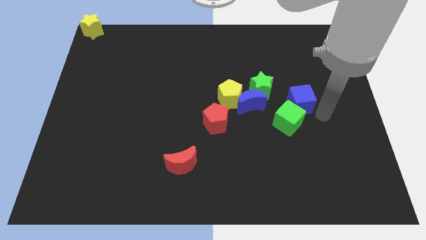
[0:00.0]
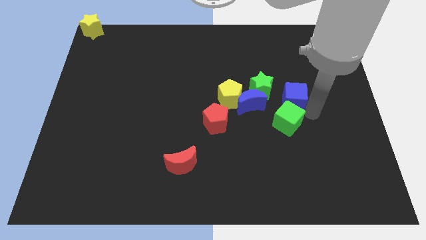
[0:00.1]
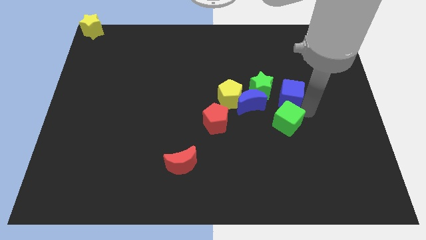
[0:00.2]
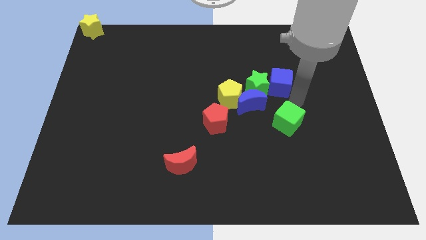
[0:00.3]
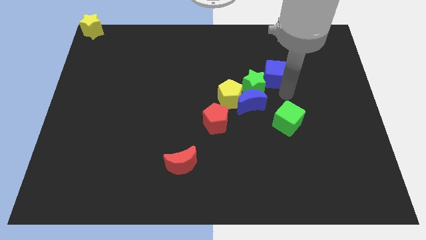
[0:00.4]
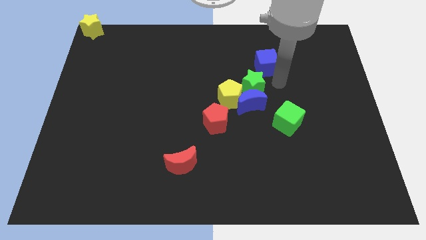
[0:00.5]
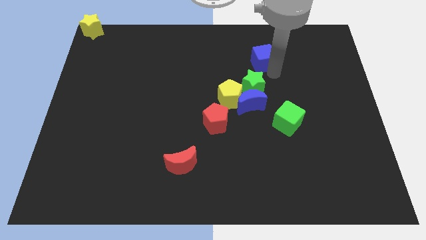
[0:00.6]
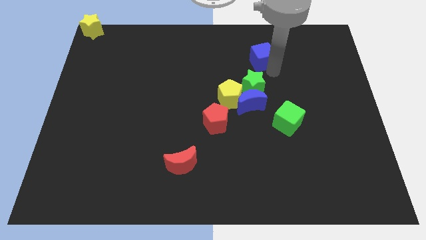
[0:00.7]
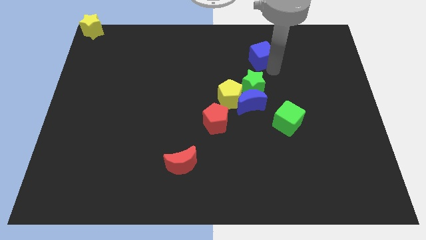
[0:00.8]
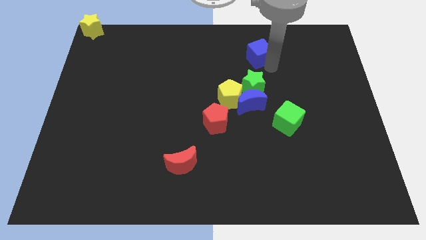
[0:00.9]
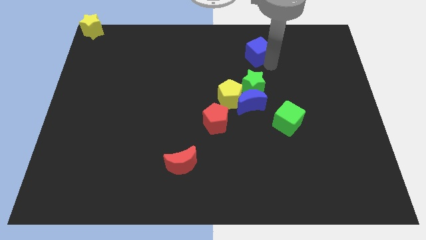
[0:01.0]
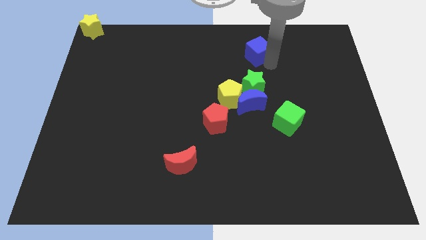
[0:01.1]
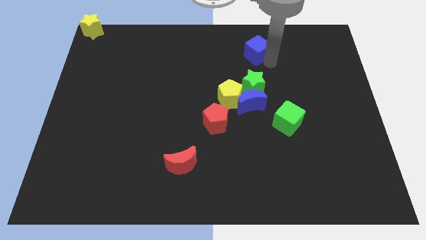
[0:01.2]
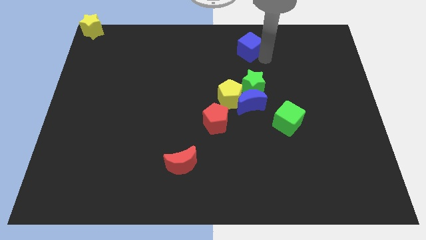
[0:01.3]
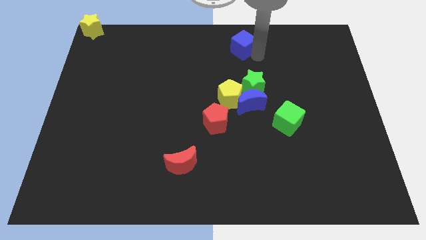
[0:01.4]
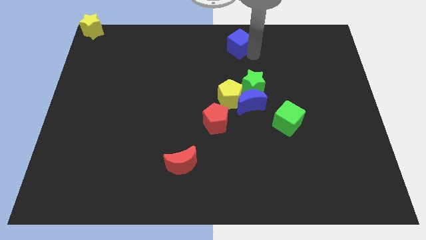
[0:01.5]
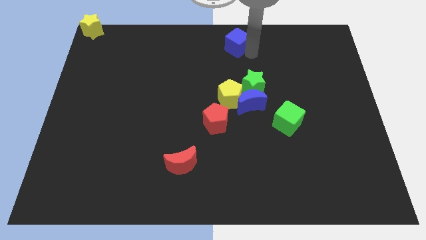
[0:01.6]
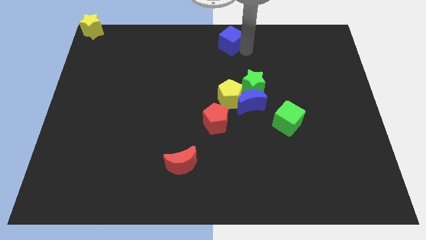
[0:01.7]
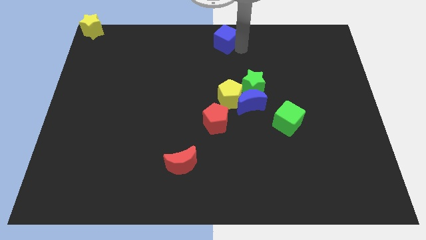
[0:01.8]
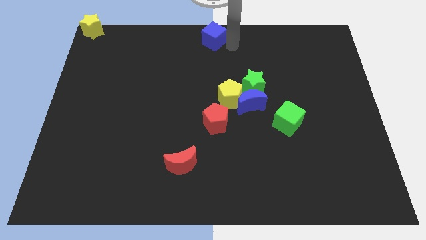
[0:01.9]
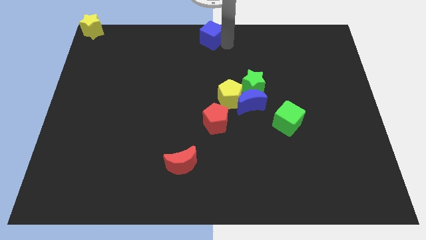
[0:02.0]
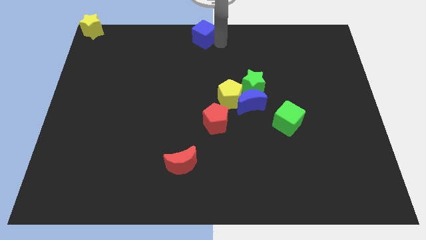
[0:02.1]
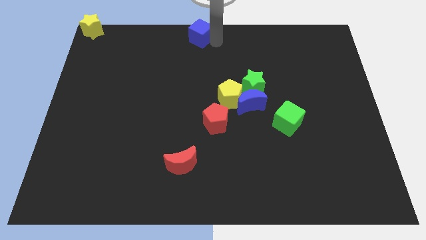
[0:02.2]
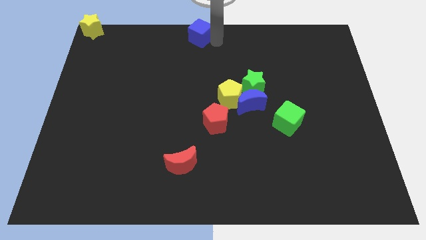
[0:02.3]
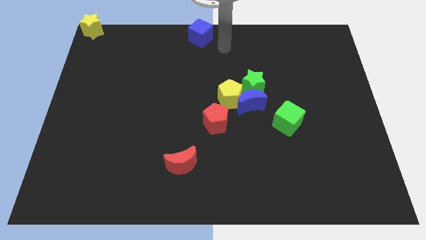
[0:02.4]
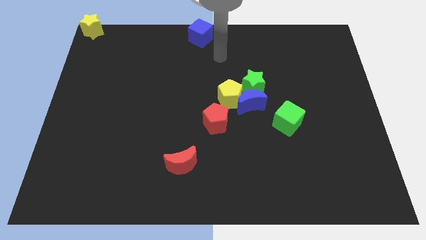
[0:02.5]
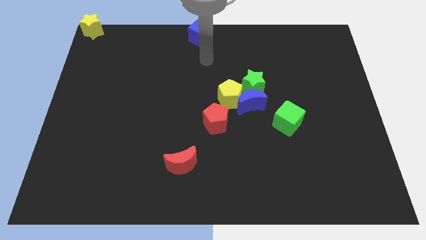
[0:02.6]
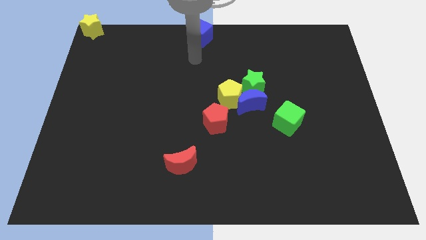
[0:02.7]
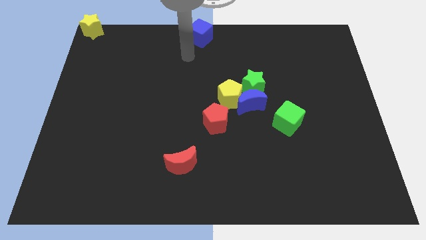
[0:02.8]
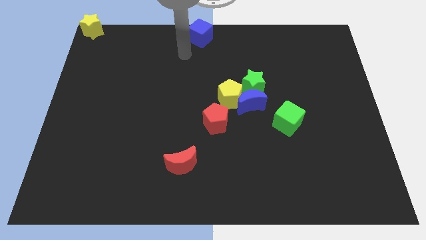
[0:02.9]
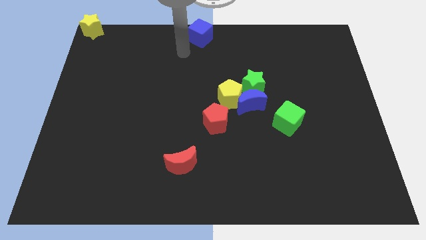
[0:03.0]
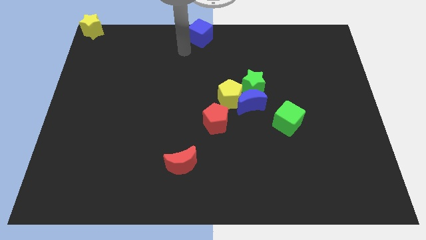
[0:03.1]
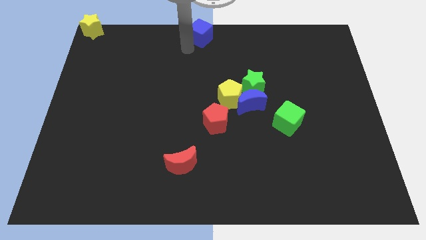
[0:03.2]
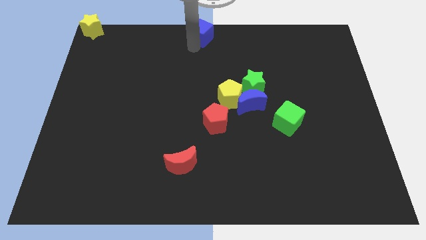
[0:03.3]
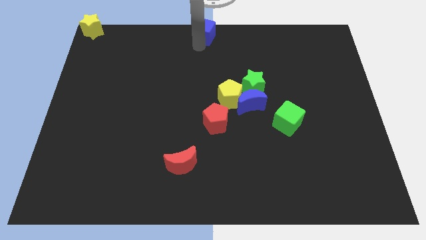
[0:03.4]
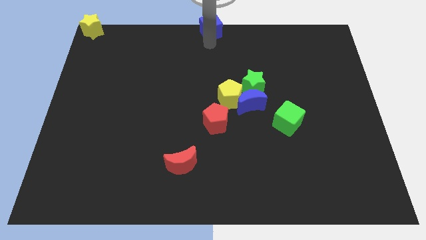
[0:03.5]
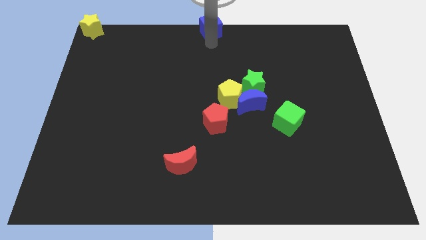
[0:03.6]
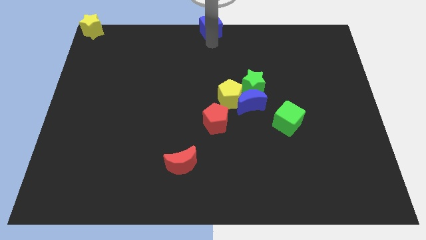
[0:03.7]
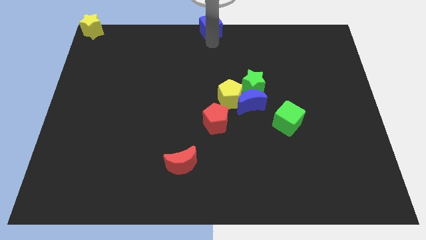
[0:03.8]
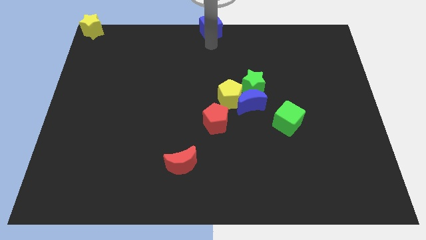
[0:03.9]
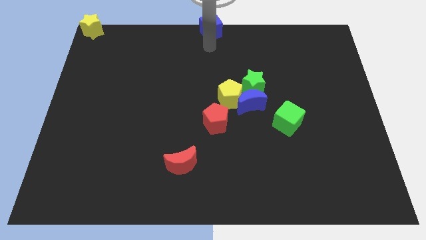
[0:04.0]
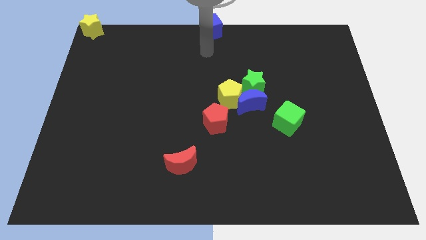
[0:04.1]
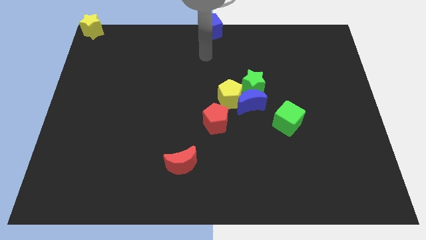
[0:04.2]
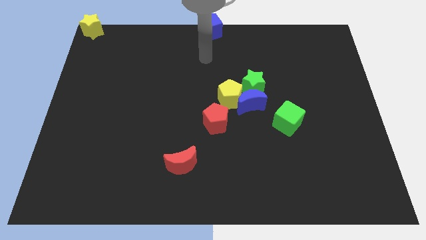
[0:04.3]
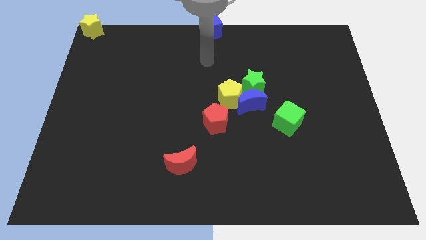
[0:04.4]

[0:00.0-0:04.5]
move the blue cube to the top center of the board

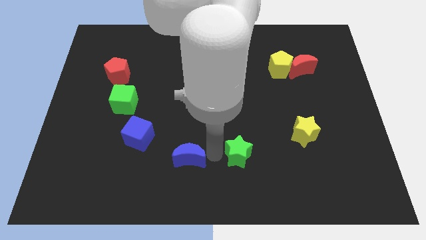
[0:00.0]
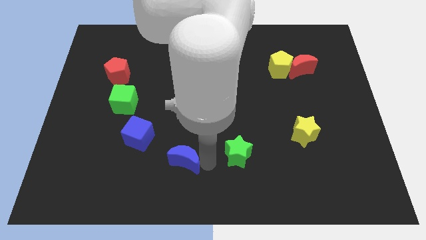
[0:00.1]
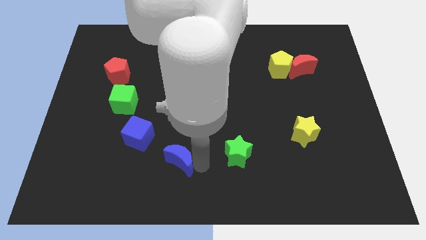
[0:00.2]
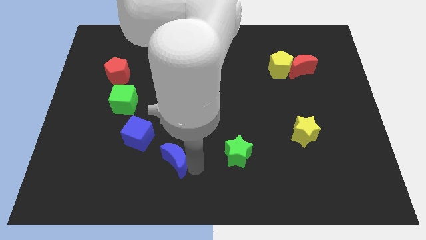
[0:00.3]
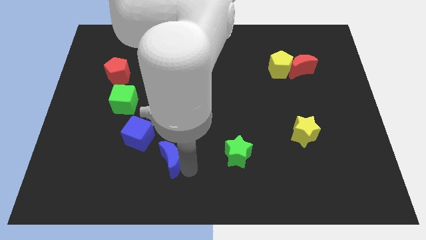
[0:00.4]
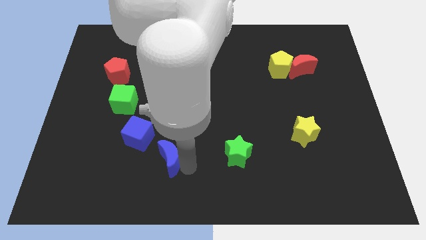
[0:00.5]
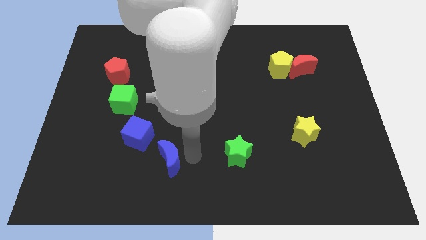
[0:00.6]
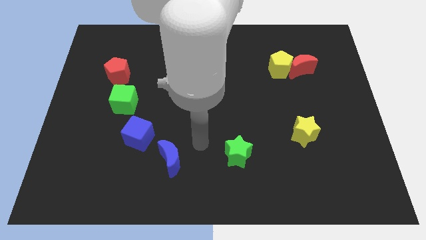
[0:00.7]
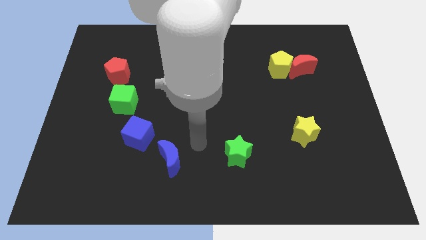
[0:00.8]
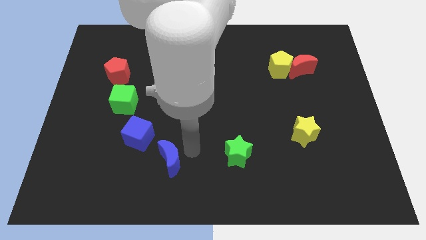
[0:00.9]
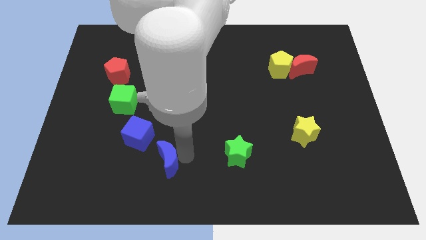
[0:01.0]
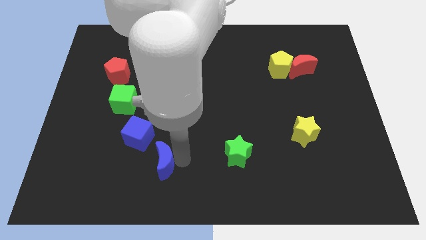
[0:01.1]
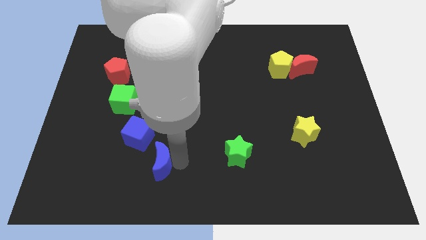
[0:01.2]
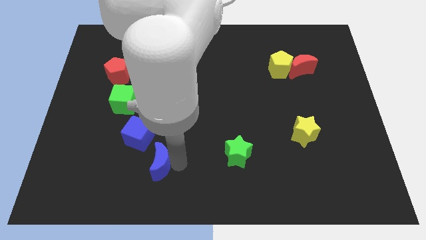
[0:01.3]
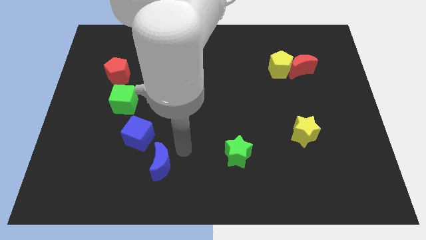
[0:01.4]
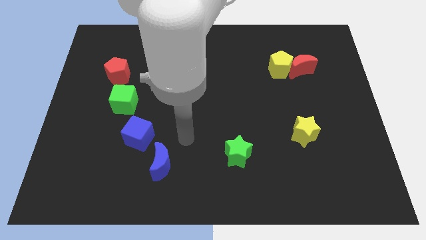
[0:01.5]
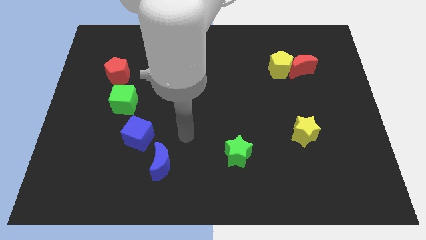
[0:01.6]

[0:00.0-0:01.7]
place blue crescent below blue cube

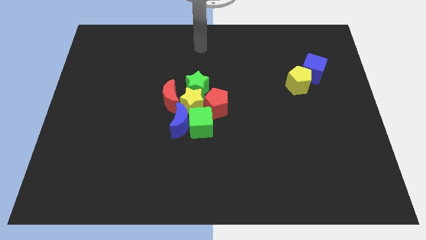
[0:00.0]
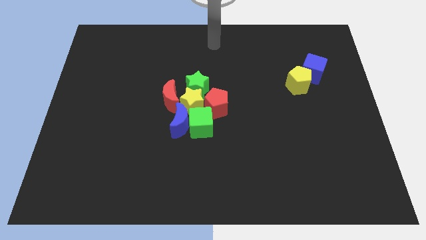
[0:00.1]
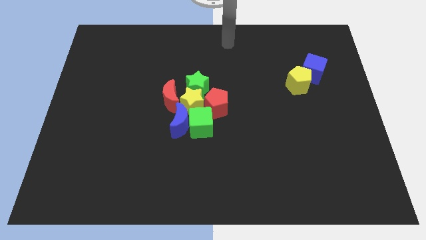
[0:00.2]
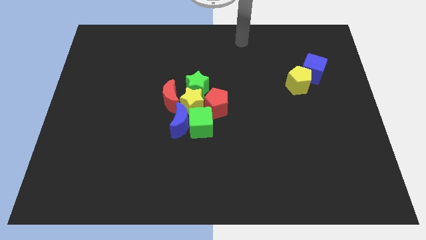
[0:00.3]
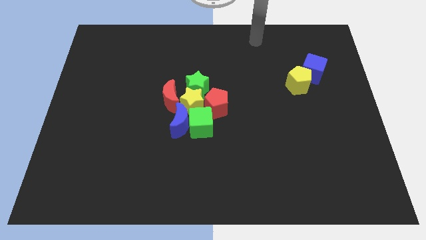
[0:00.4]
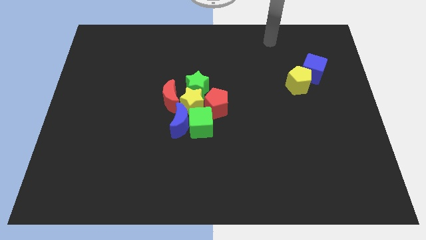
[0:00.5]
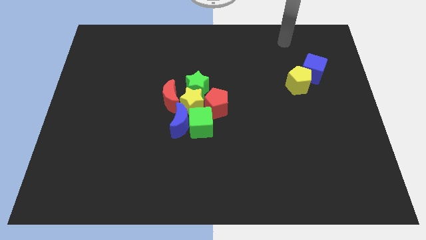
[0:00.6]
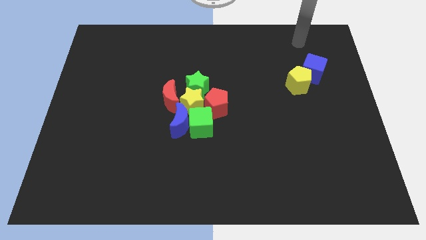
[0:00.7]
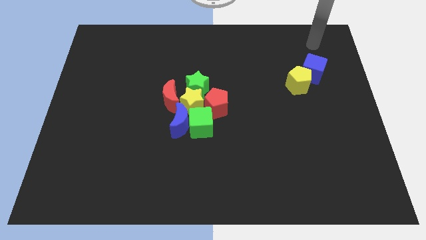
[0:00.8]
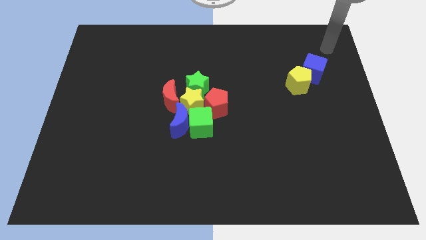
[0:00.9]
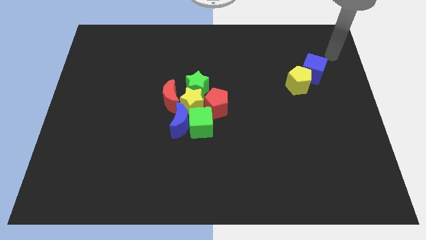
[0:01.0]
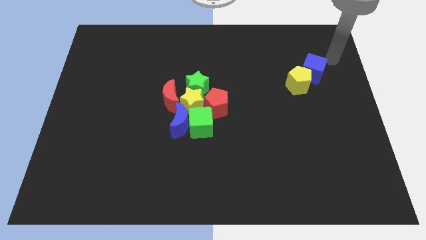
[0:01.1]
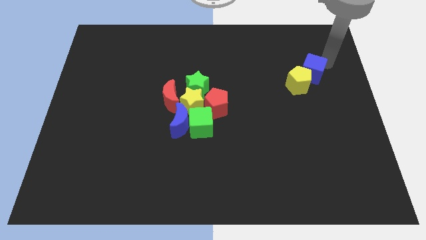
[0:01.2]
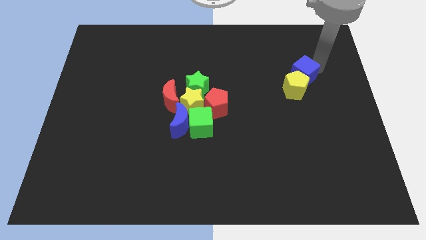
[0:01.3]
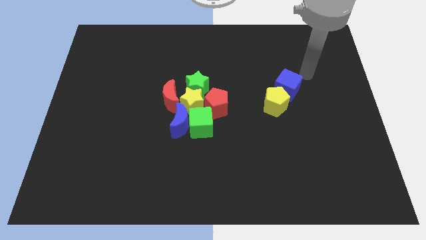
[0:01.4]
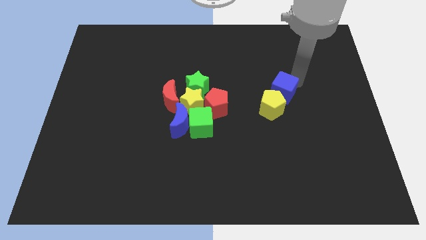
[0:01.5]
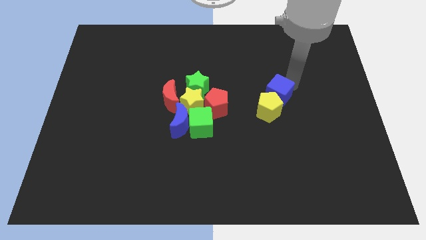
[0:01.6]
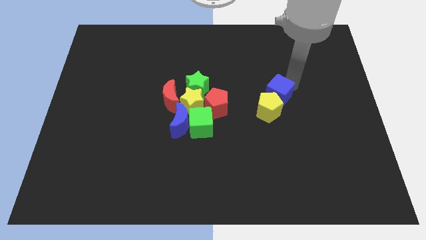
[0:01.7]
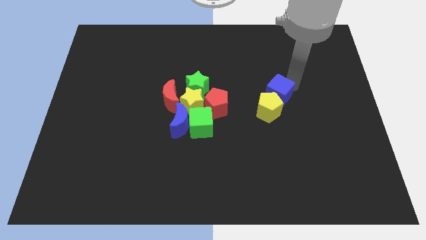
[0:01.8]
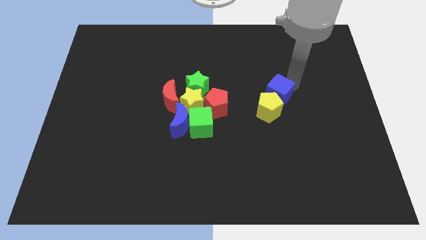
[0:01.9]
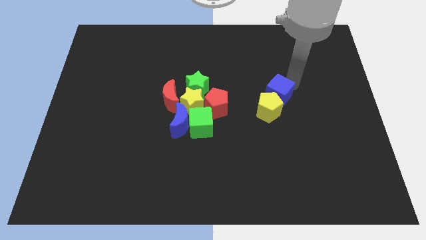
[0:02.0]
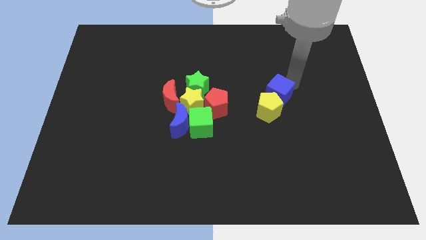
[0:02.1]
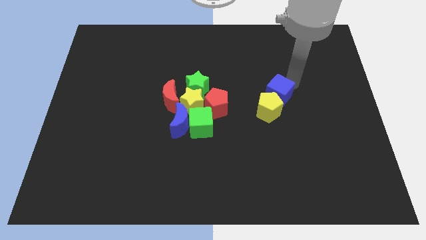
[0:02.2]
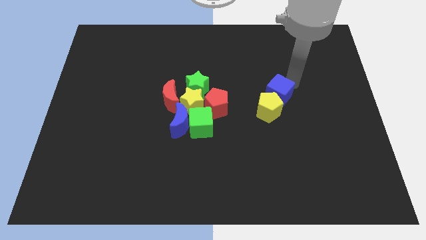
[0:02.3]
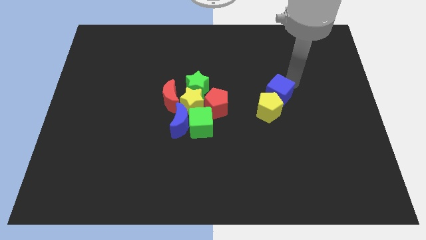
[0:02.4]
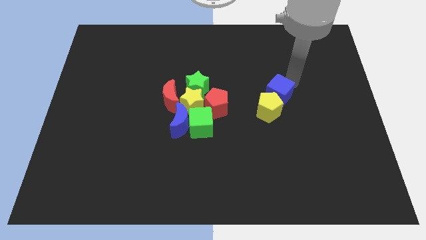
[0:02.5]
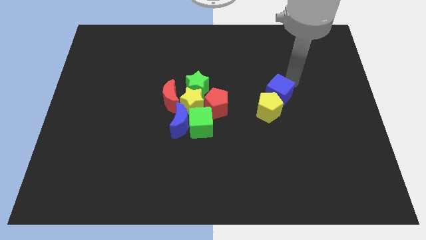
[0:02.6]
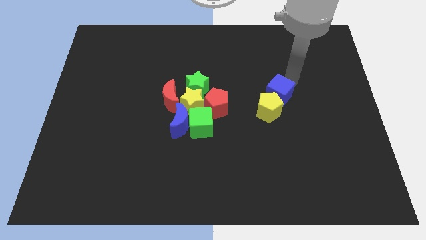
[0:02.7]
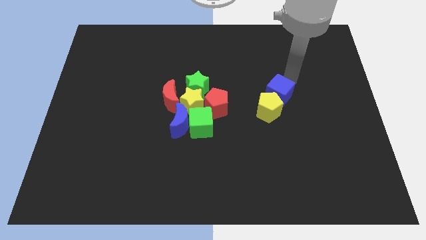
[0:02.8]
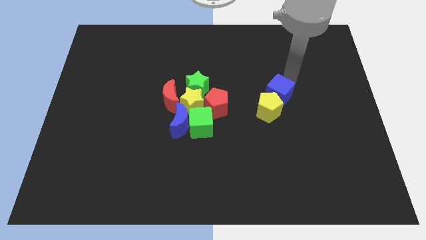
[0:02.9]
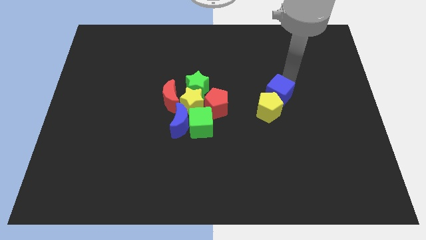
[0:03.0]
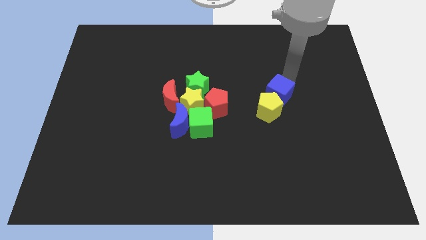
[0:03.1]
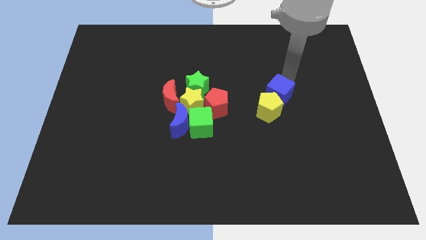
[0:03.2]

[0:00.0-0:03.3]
move the blue cube along with the yellow pentagon to the right of the red pentagon
